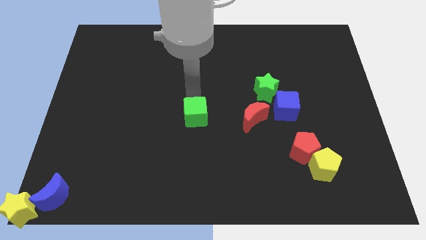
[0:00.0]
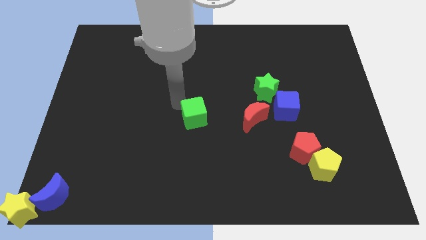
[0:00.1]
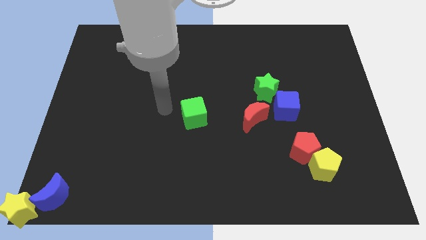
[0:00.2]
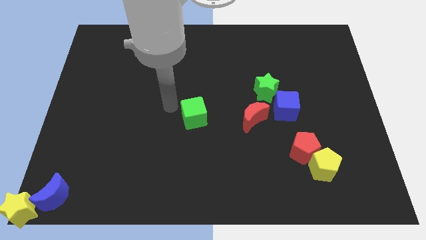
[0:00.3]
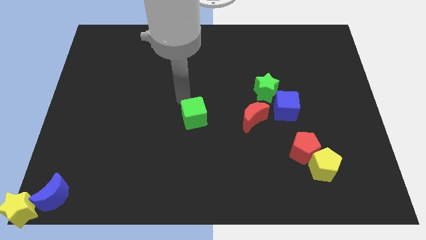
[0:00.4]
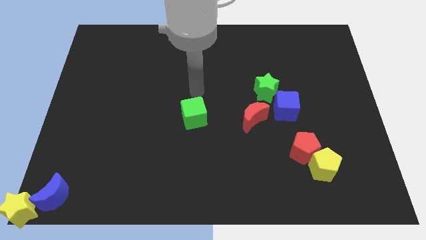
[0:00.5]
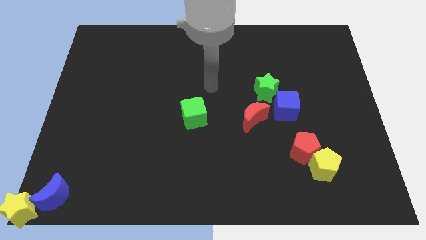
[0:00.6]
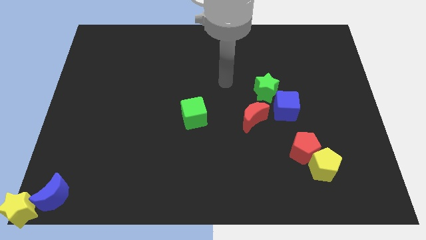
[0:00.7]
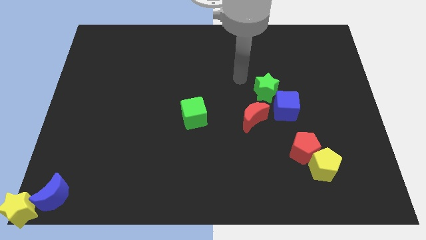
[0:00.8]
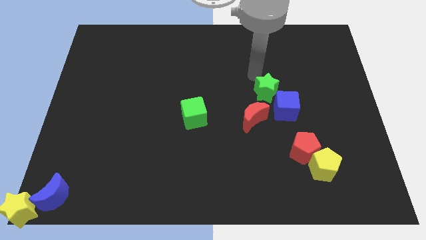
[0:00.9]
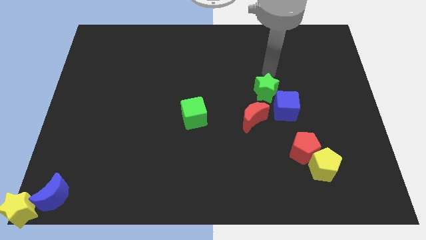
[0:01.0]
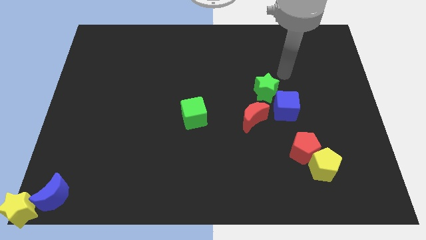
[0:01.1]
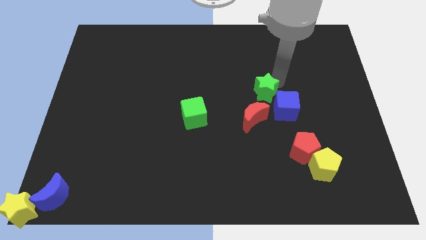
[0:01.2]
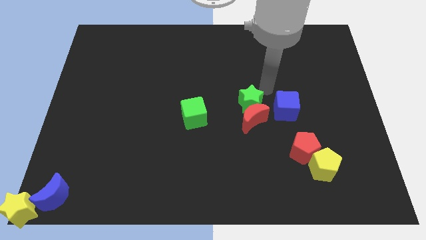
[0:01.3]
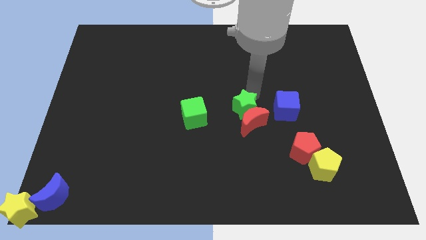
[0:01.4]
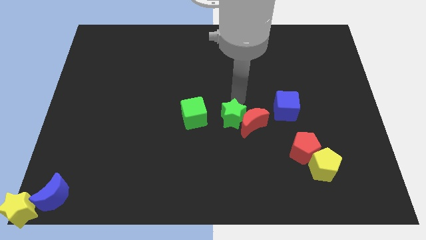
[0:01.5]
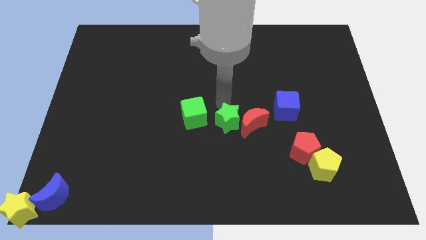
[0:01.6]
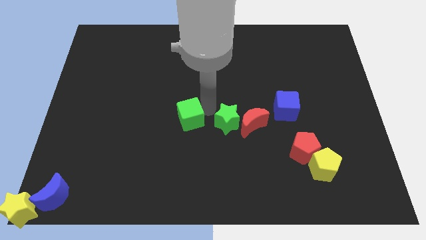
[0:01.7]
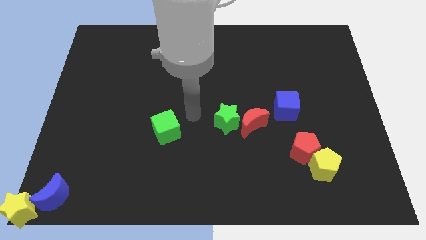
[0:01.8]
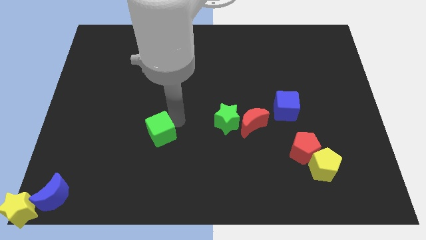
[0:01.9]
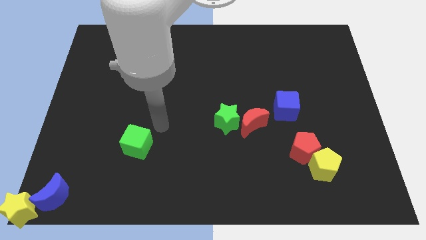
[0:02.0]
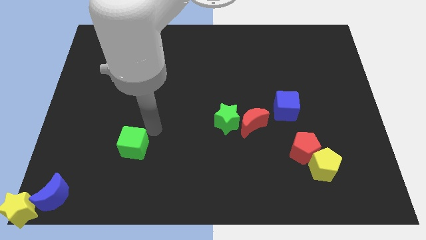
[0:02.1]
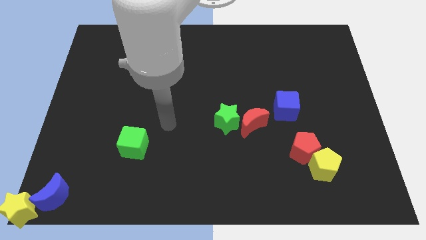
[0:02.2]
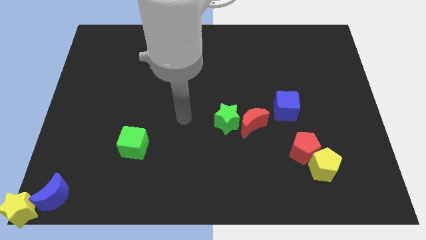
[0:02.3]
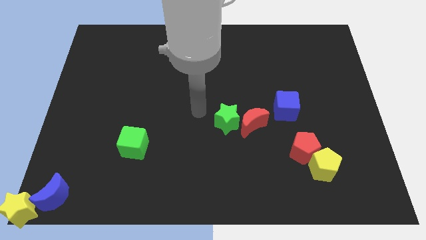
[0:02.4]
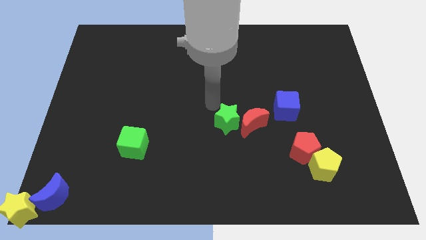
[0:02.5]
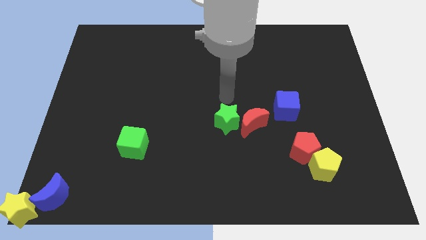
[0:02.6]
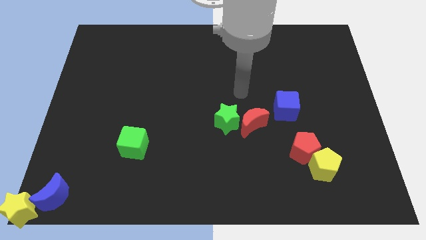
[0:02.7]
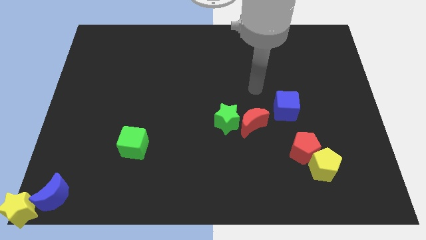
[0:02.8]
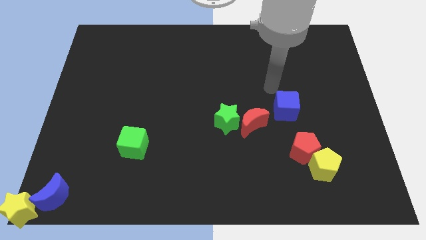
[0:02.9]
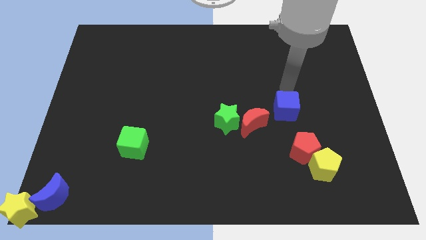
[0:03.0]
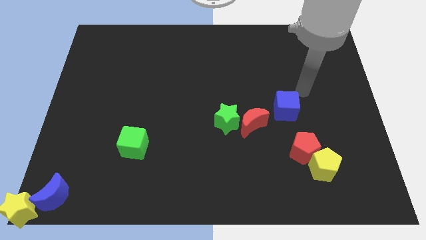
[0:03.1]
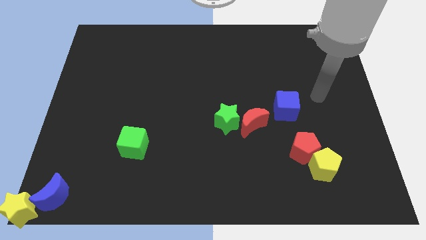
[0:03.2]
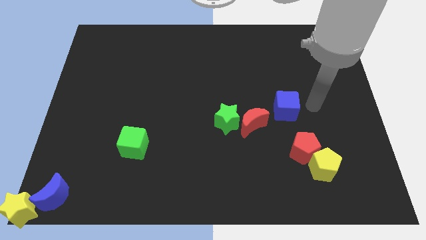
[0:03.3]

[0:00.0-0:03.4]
push the green star and green cube towards the bottom left side of the board

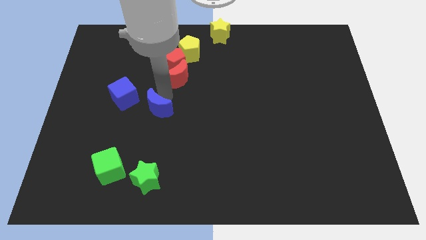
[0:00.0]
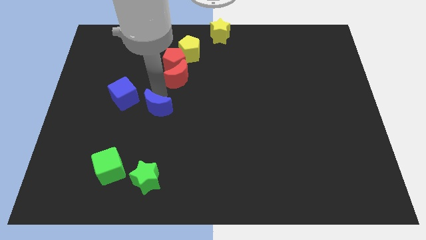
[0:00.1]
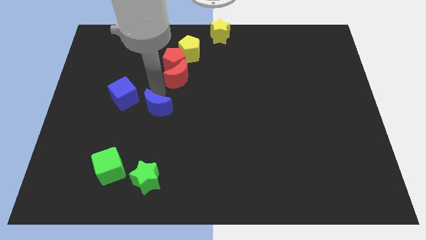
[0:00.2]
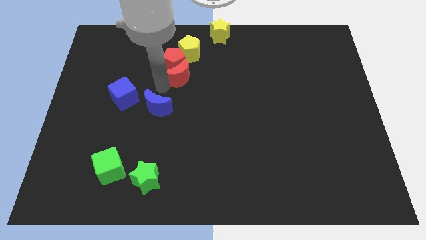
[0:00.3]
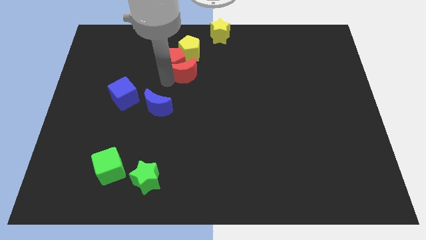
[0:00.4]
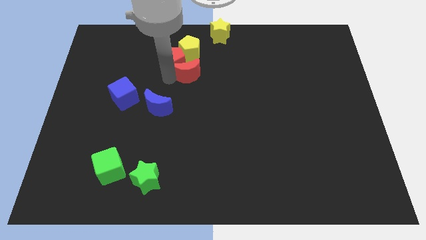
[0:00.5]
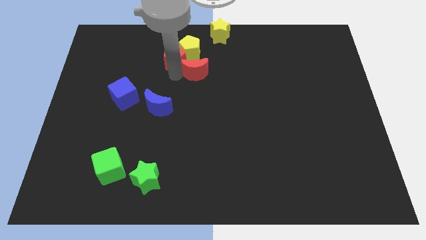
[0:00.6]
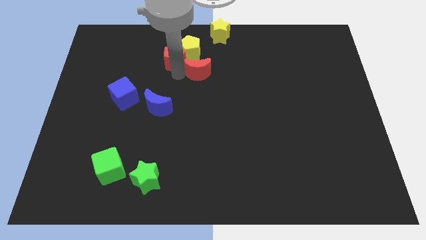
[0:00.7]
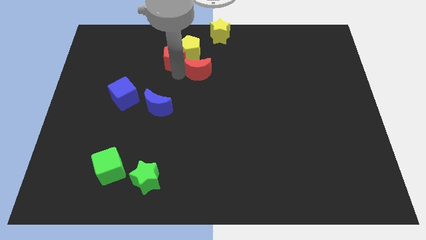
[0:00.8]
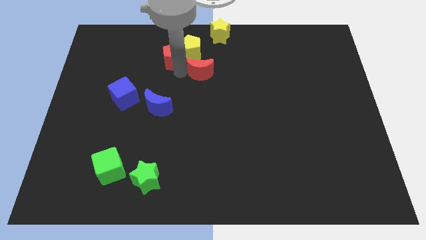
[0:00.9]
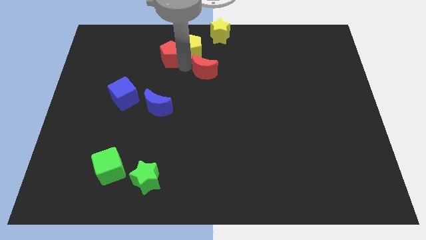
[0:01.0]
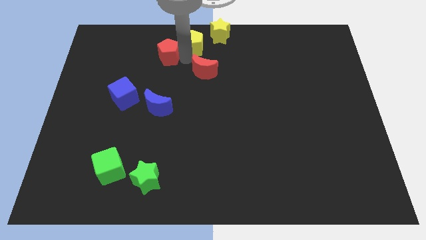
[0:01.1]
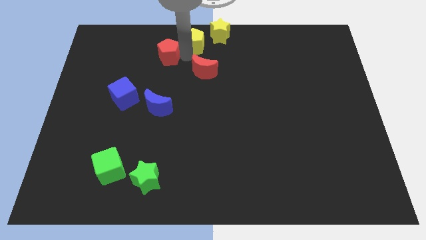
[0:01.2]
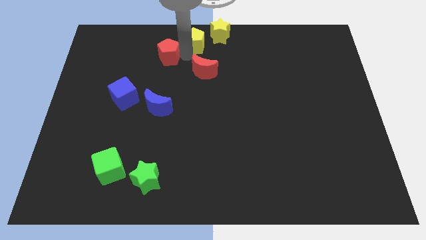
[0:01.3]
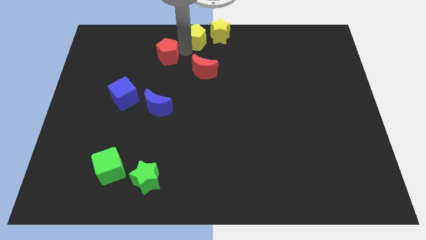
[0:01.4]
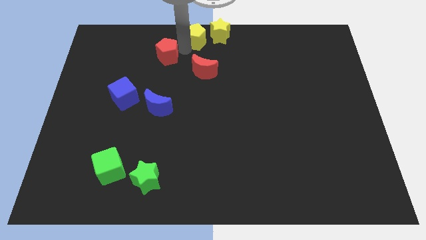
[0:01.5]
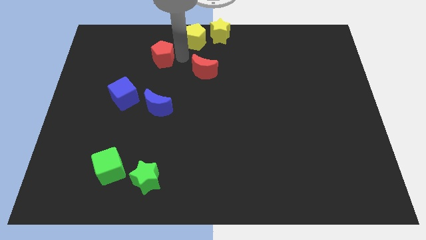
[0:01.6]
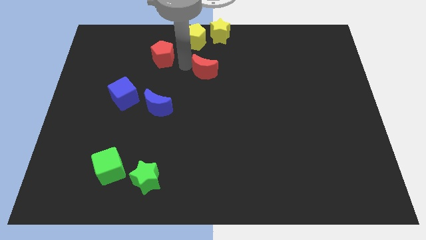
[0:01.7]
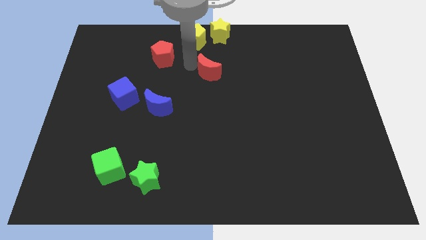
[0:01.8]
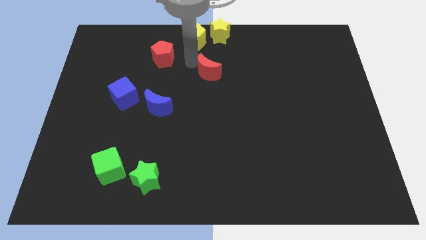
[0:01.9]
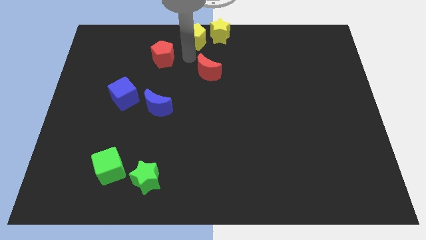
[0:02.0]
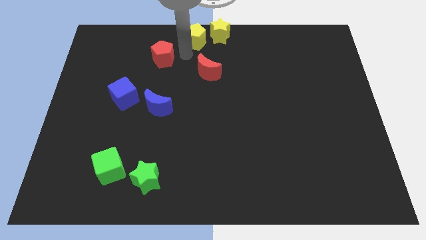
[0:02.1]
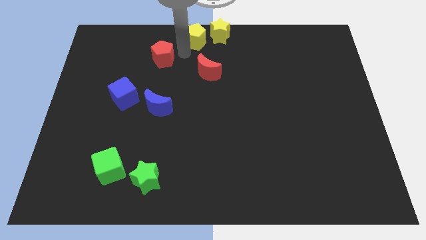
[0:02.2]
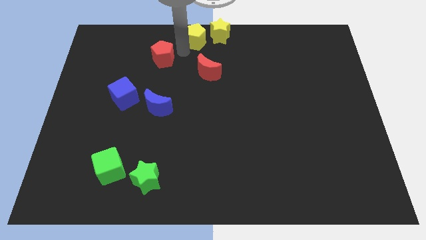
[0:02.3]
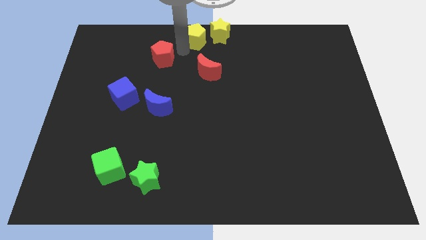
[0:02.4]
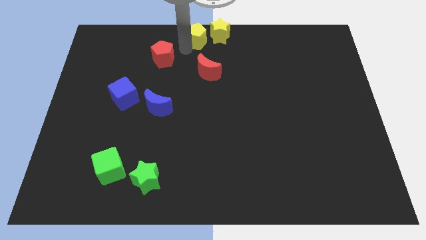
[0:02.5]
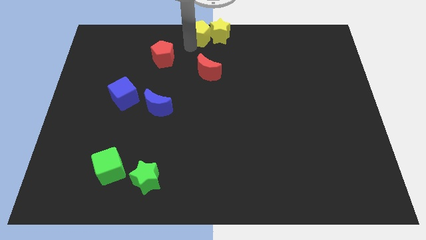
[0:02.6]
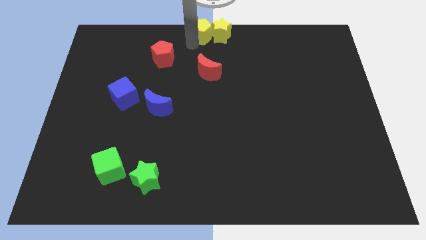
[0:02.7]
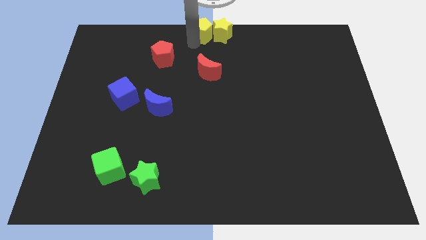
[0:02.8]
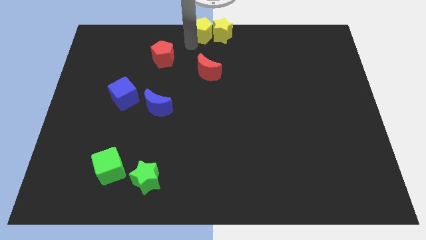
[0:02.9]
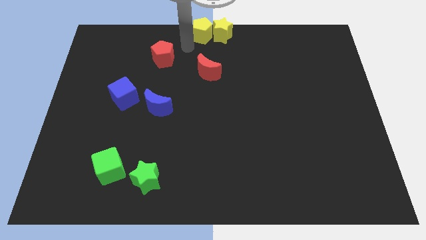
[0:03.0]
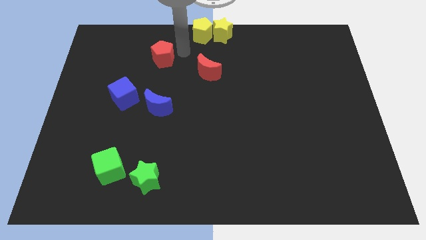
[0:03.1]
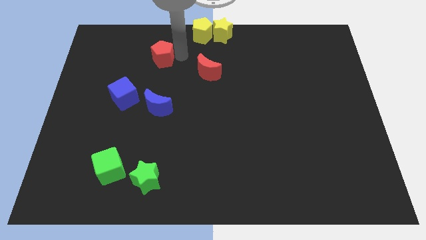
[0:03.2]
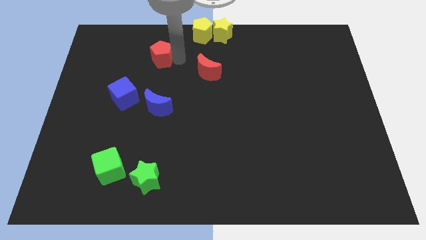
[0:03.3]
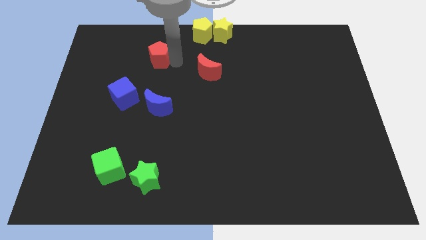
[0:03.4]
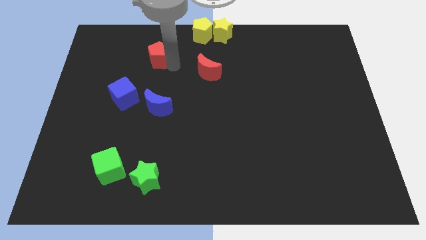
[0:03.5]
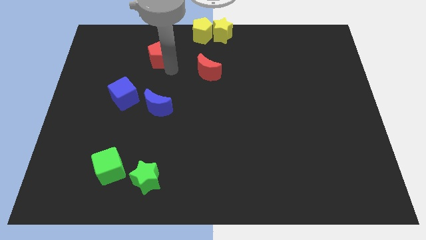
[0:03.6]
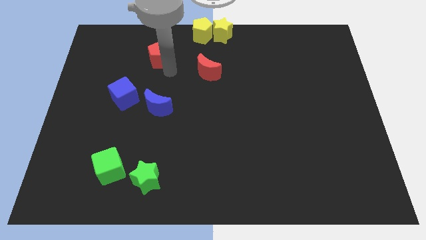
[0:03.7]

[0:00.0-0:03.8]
move yellow pentagon left of yellow star

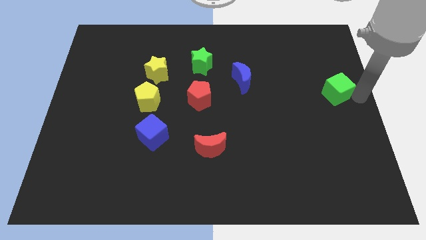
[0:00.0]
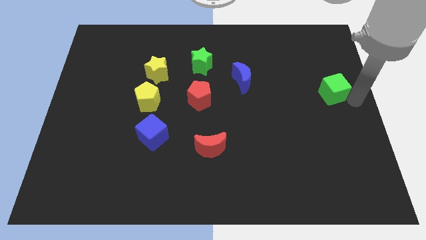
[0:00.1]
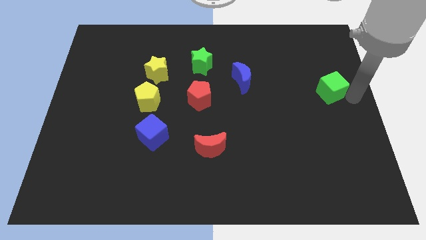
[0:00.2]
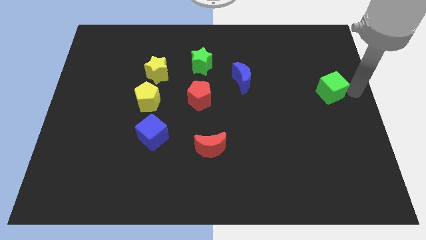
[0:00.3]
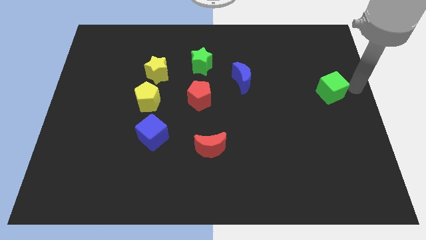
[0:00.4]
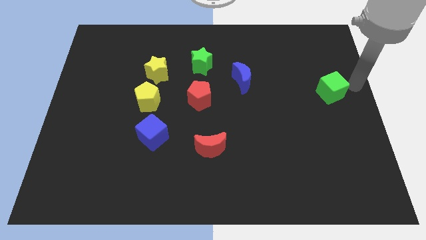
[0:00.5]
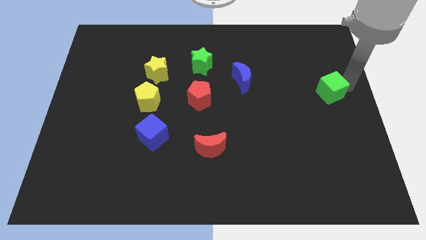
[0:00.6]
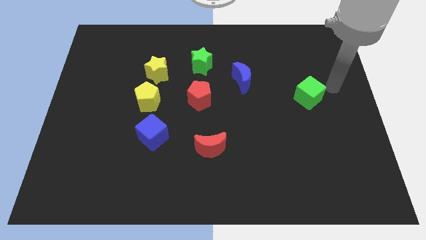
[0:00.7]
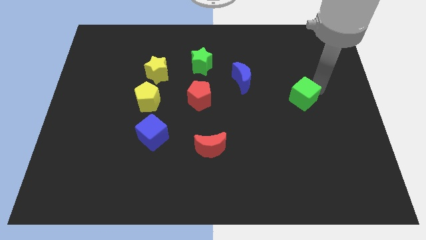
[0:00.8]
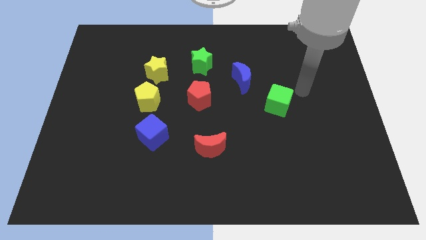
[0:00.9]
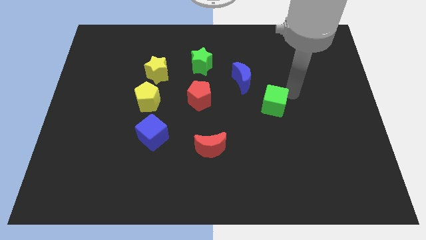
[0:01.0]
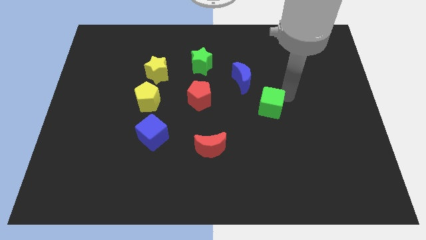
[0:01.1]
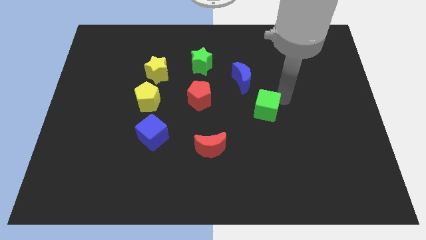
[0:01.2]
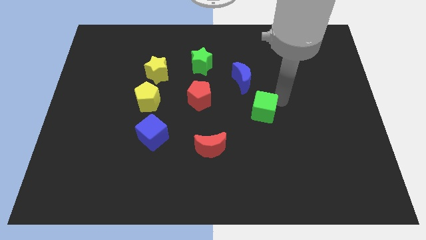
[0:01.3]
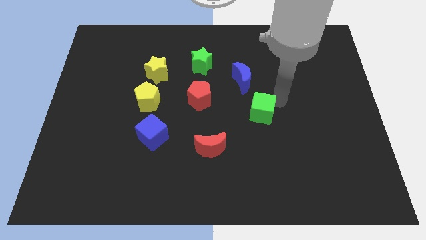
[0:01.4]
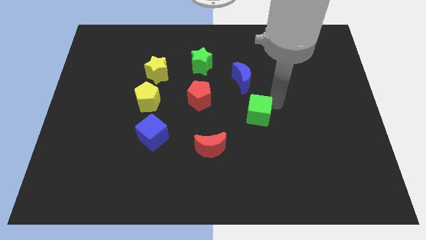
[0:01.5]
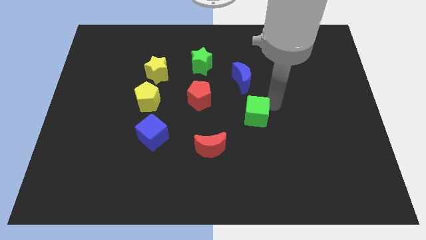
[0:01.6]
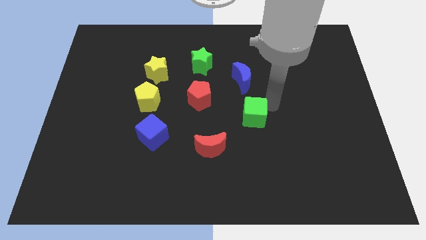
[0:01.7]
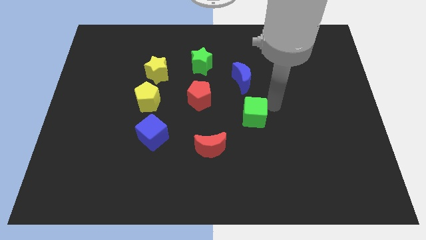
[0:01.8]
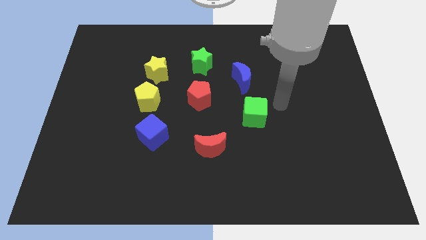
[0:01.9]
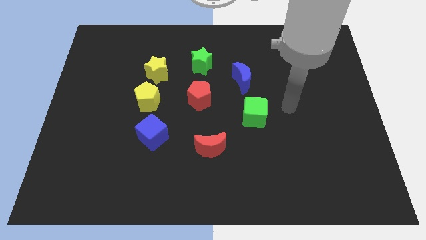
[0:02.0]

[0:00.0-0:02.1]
put the green cube below the blue moon
